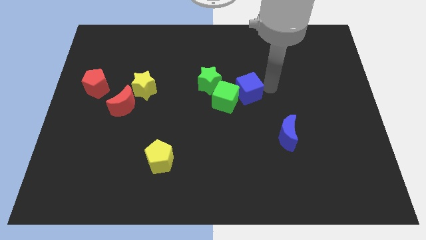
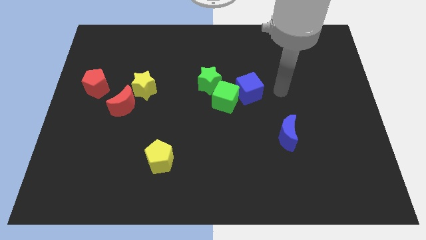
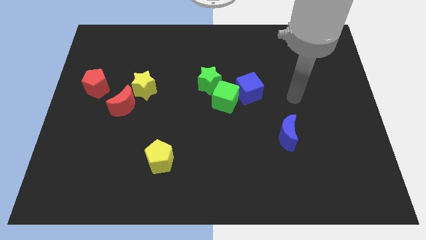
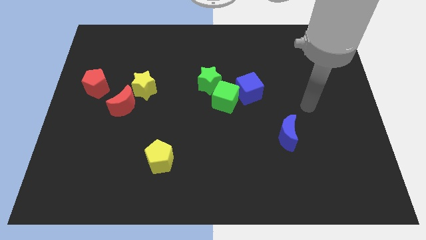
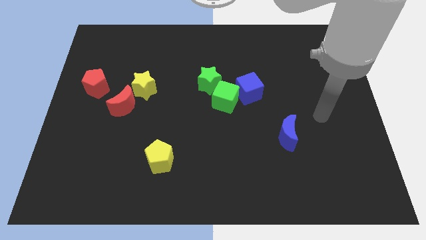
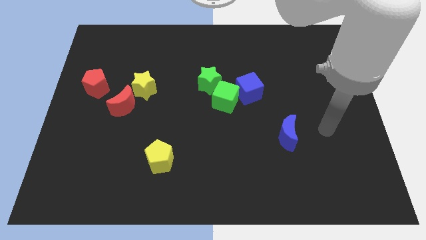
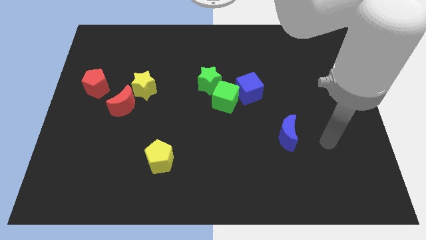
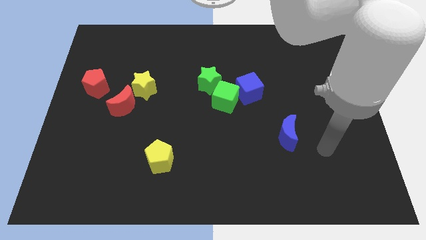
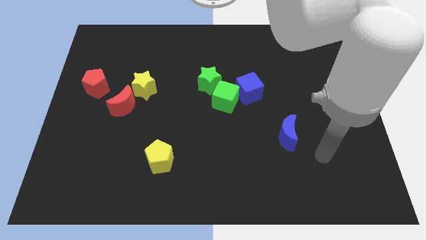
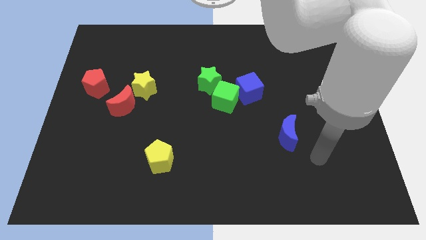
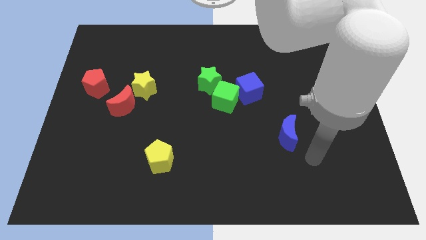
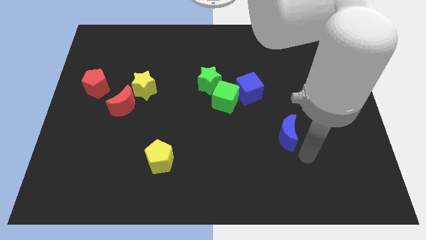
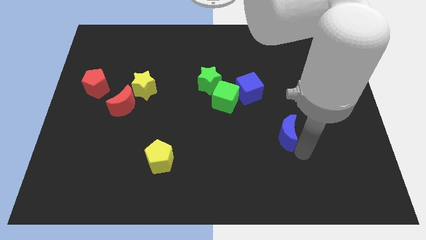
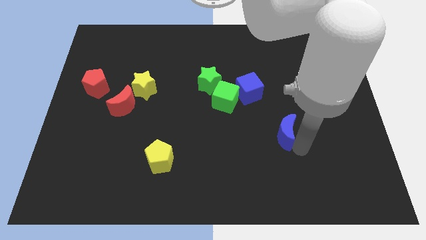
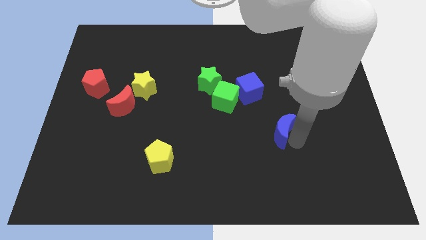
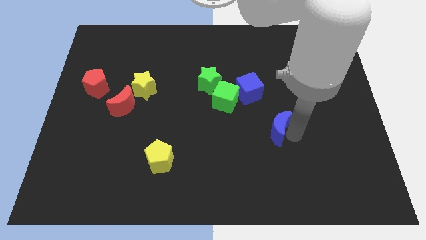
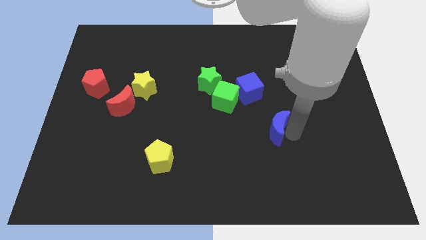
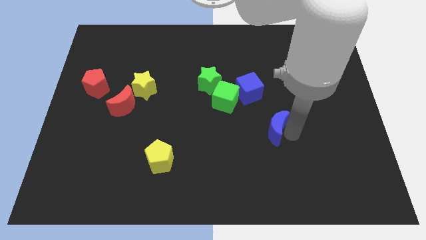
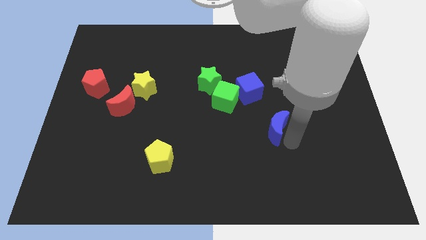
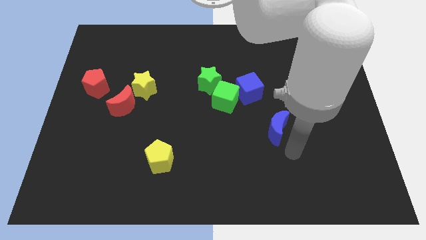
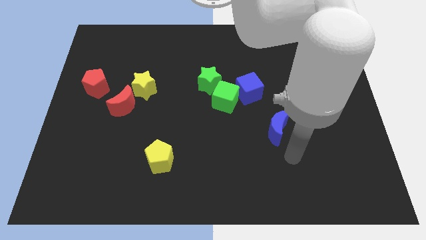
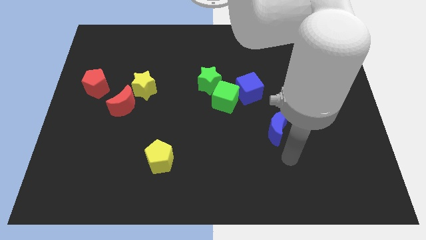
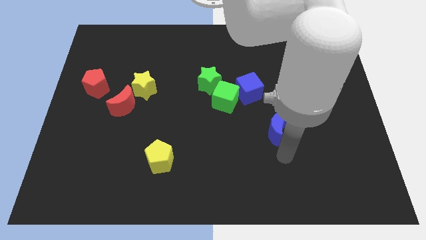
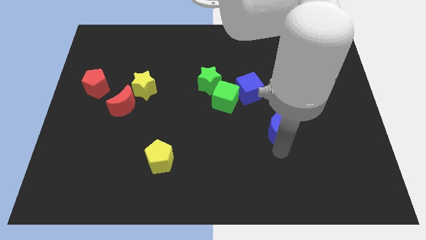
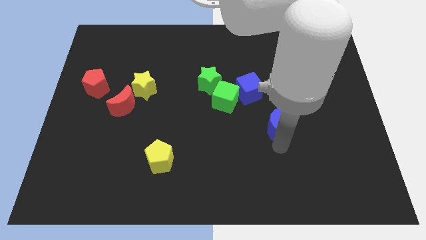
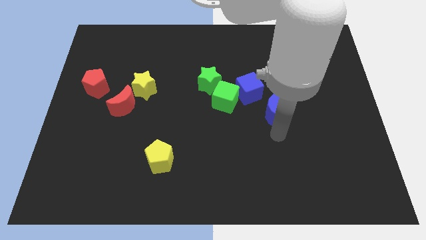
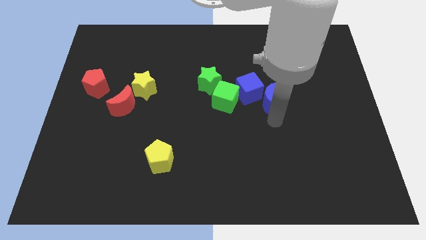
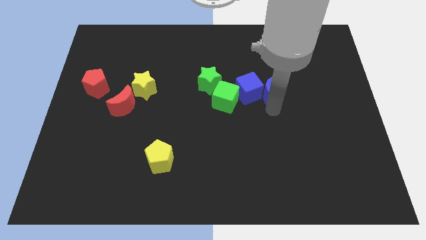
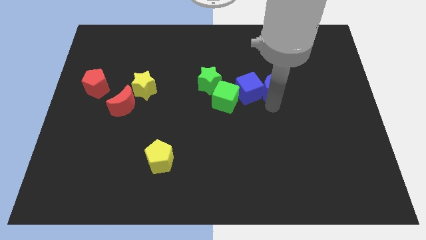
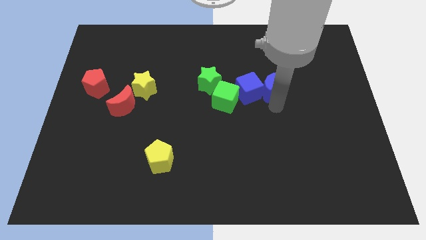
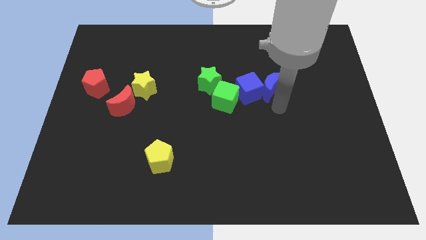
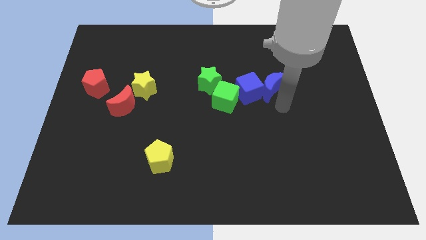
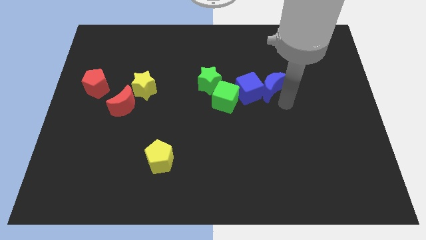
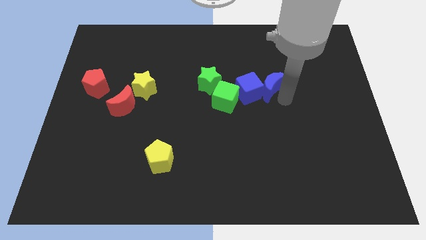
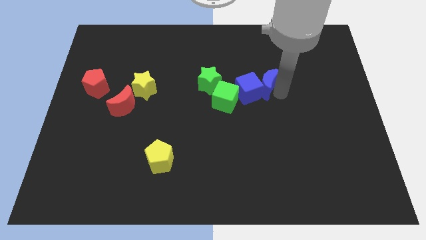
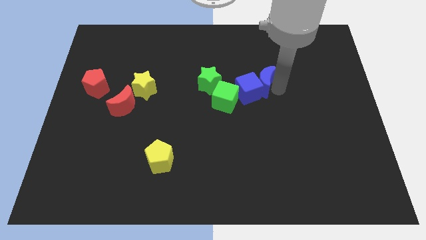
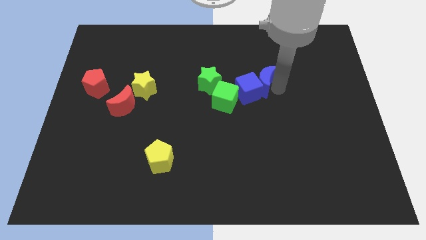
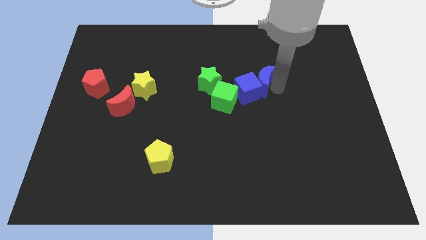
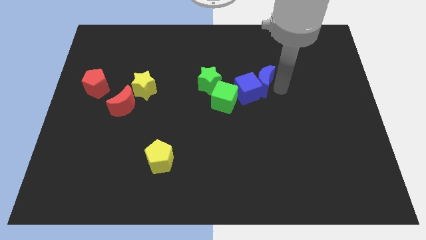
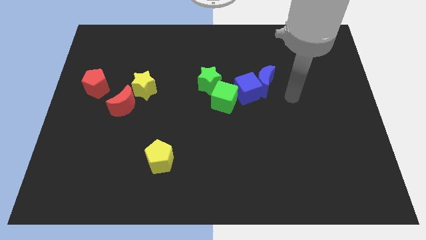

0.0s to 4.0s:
place blue moon to the right of blue cube

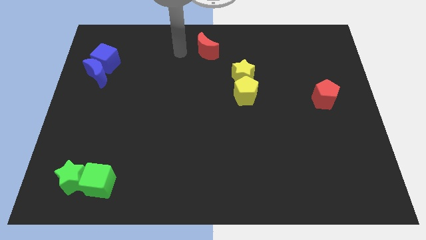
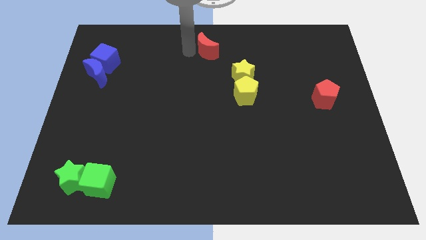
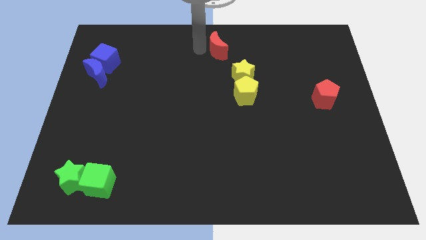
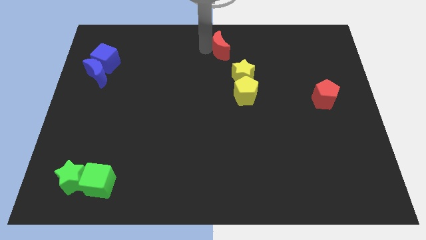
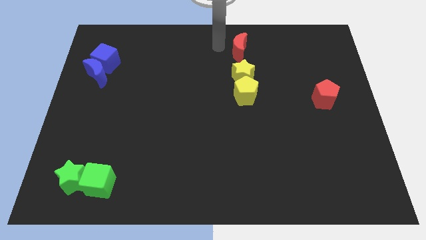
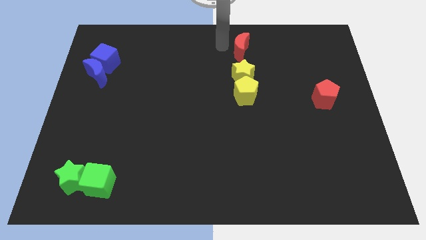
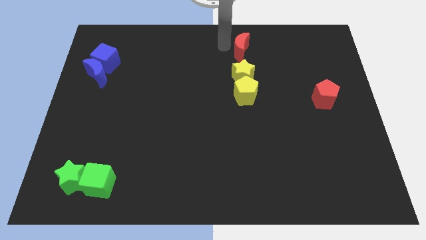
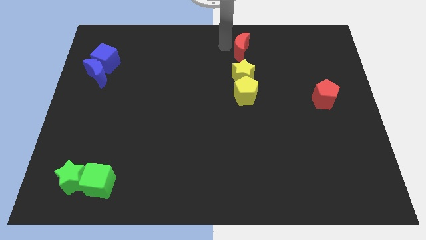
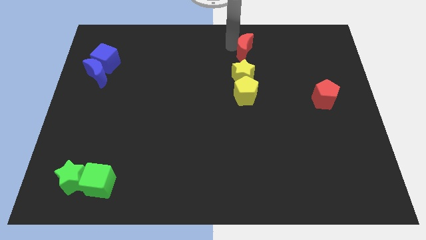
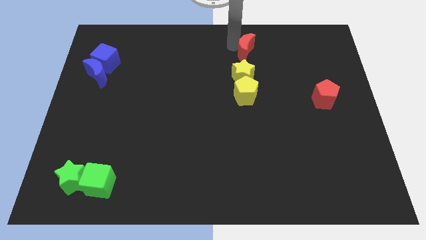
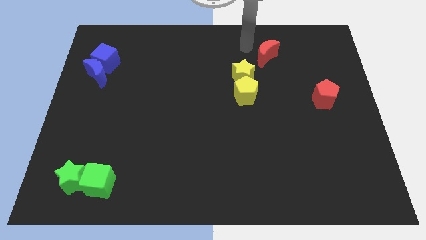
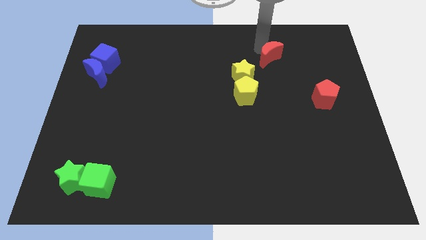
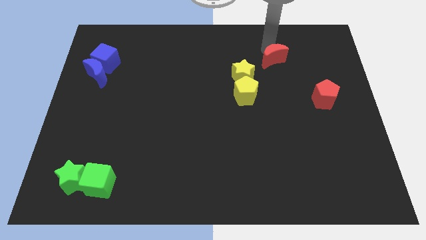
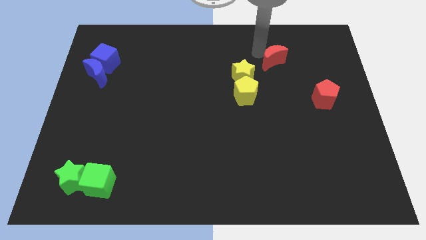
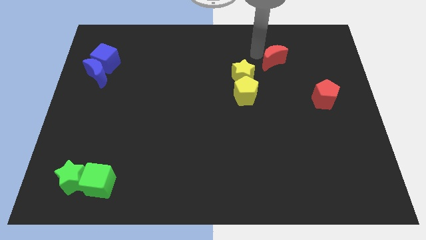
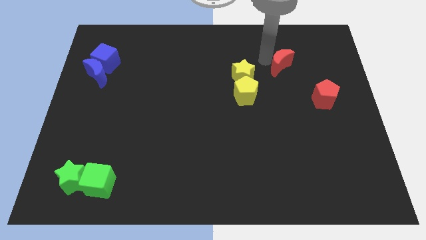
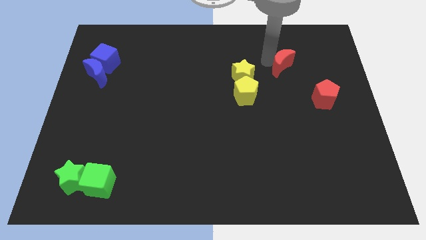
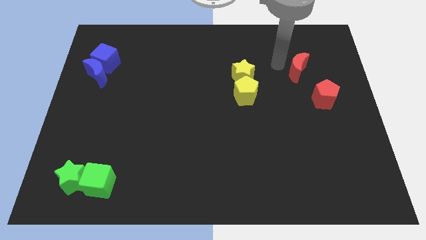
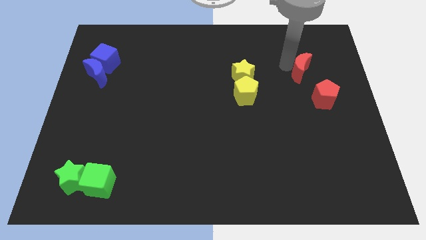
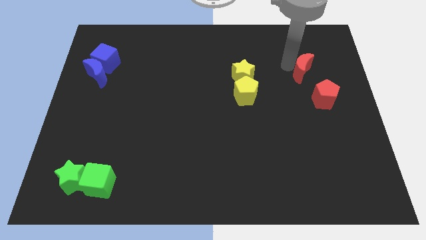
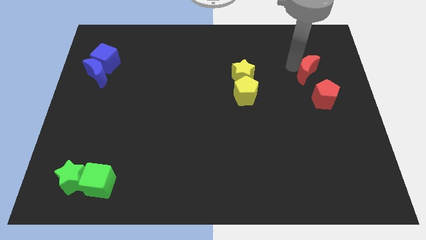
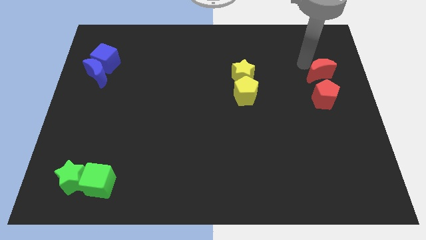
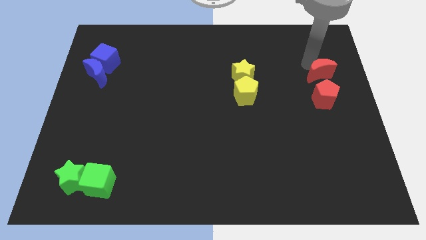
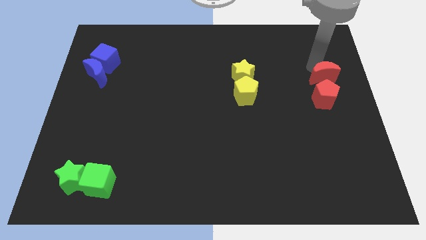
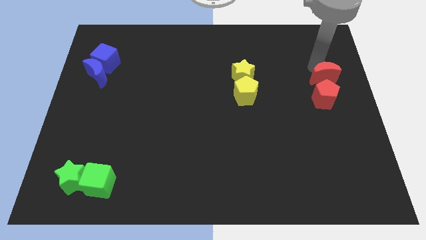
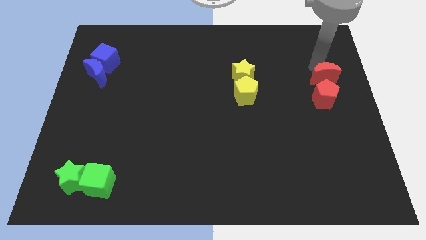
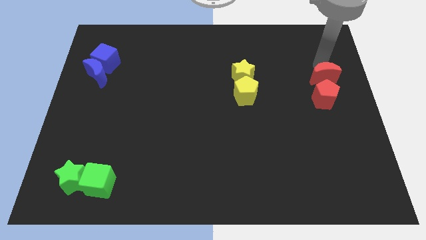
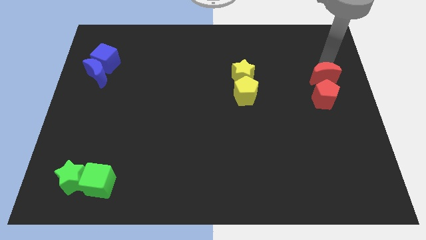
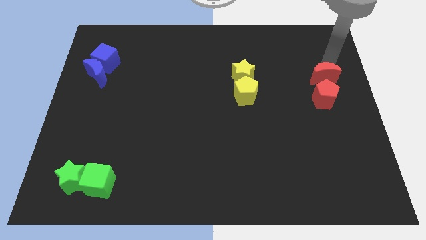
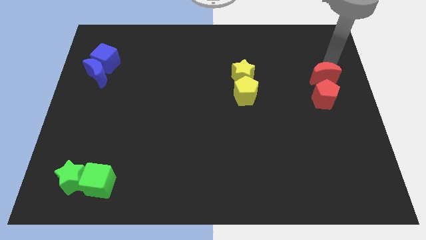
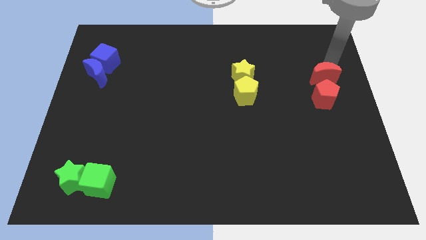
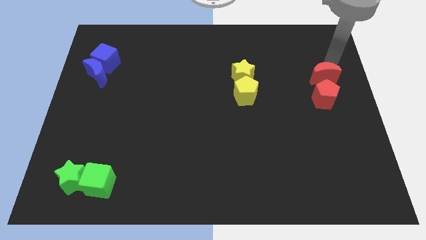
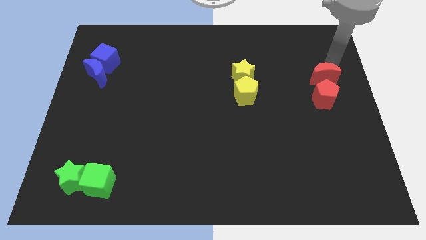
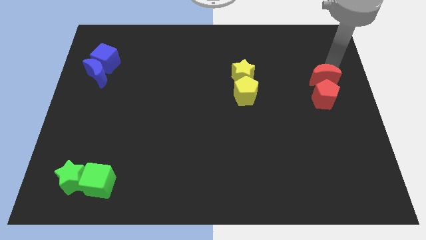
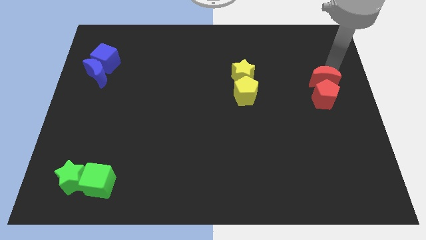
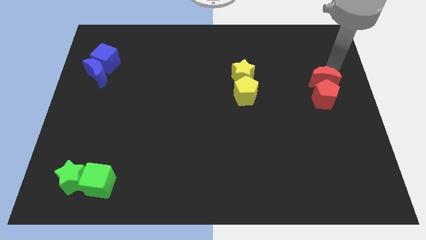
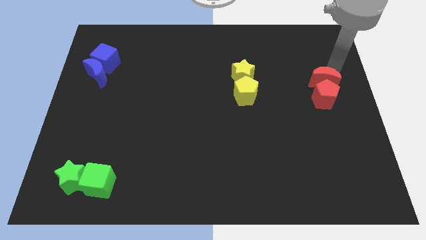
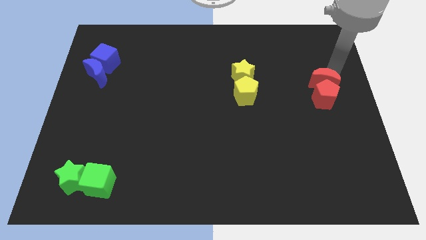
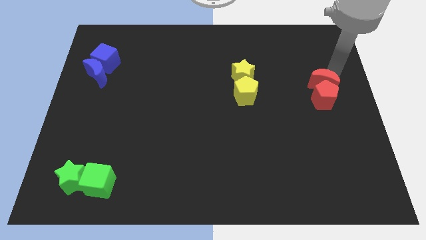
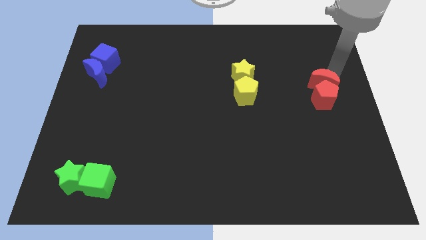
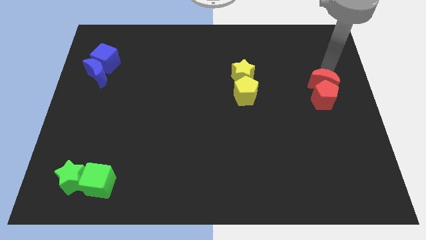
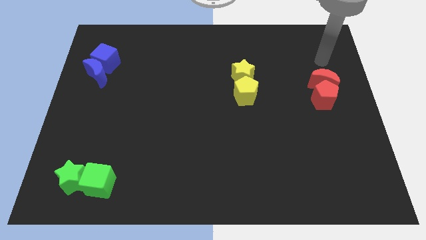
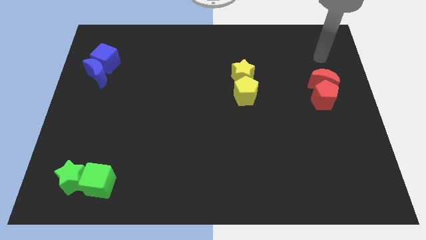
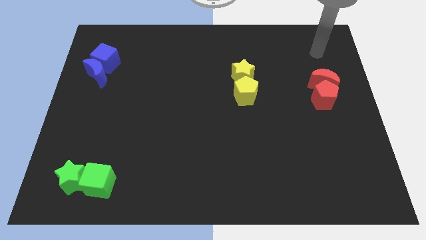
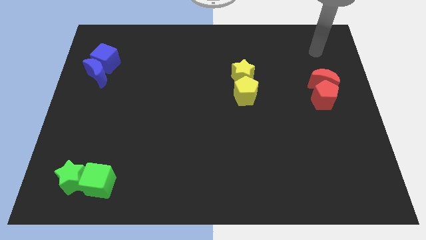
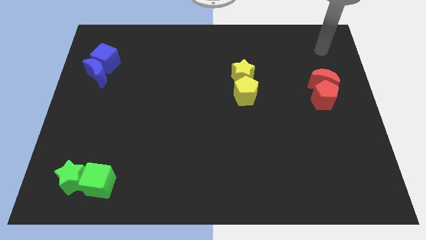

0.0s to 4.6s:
push the red moon into the red pentagon

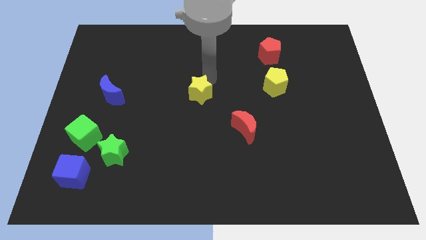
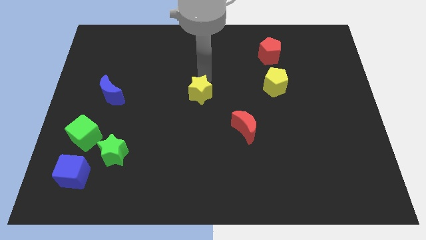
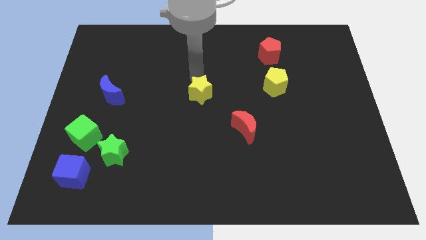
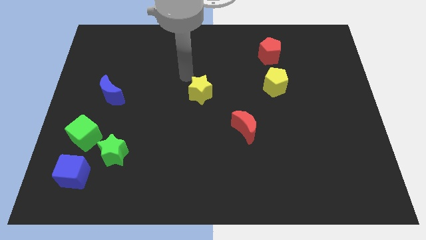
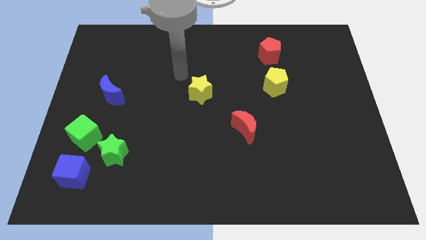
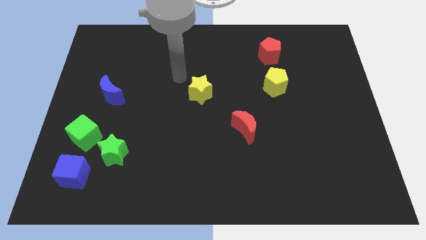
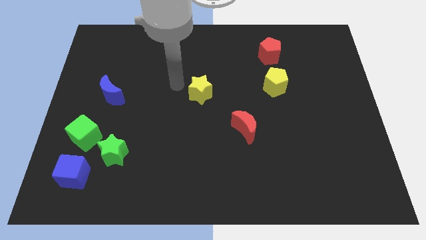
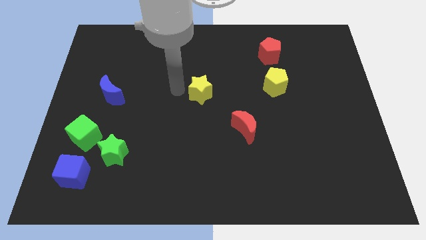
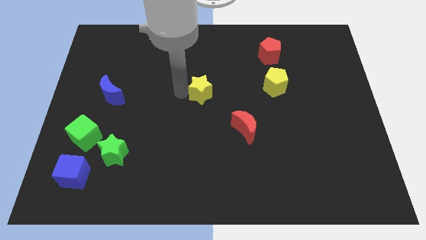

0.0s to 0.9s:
point your arm at the left of the yellow star
